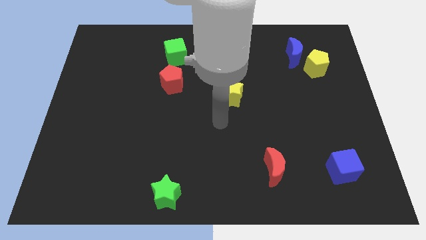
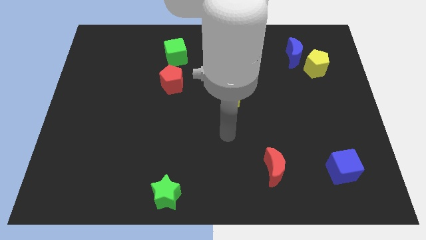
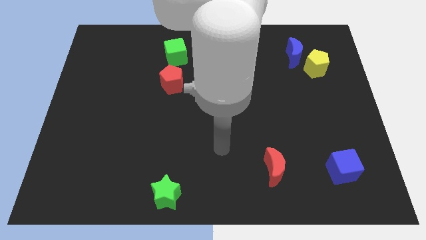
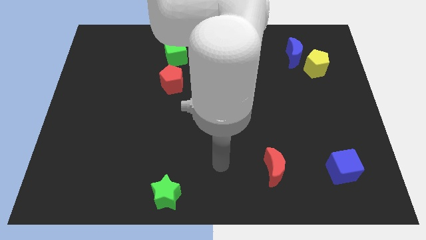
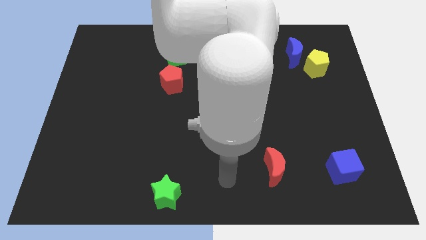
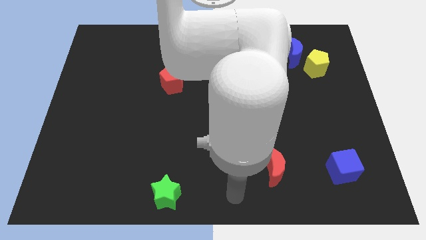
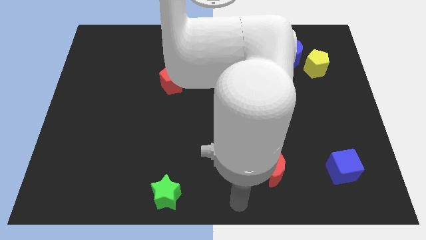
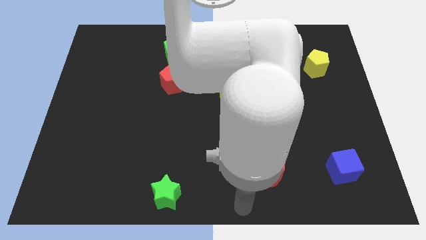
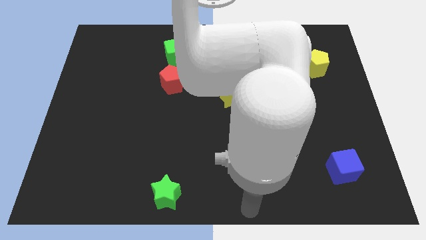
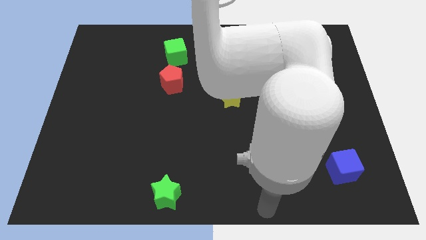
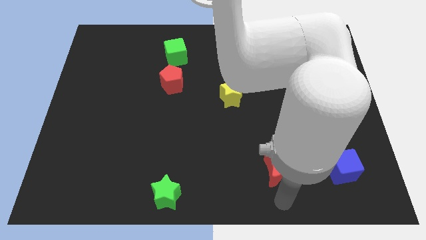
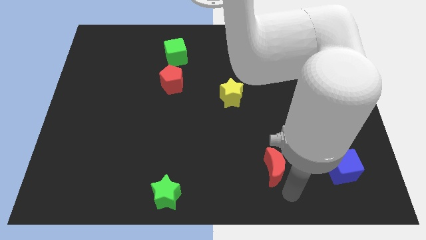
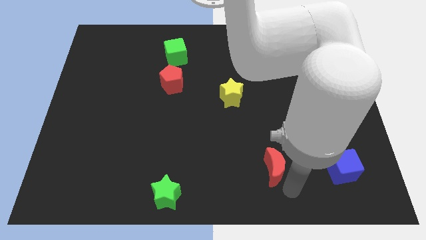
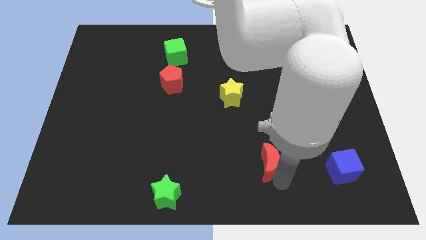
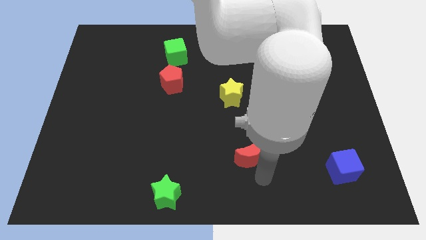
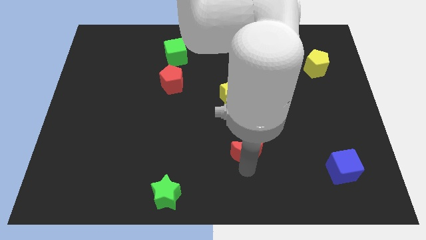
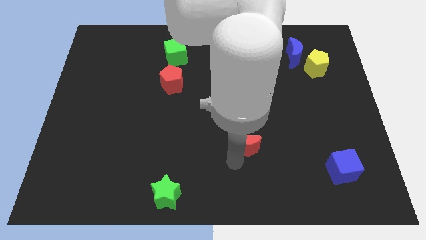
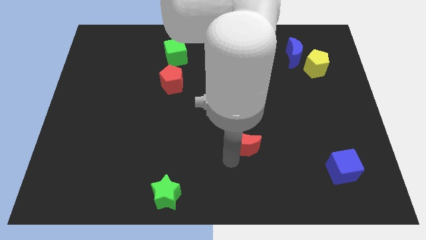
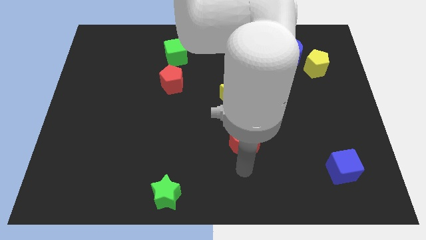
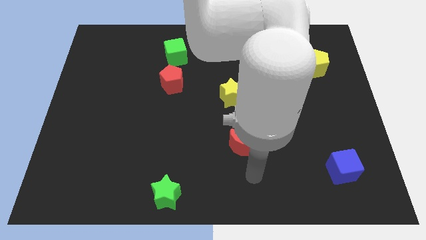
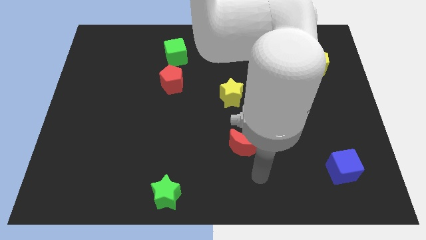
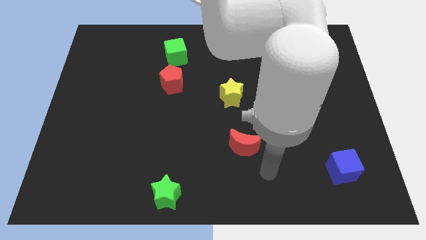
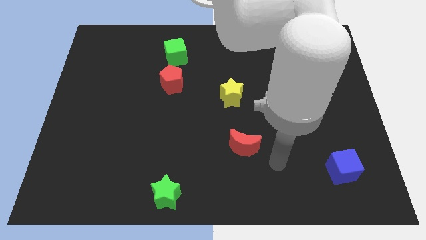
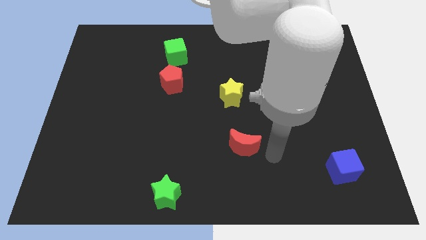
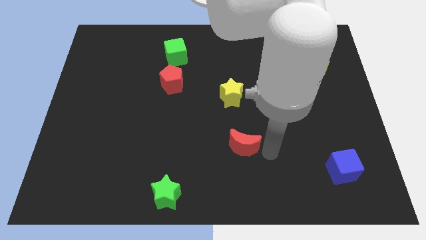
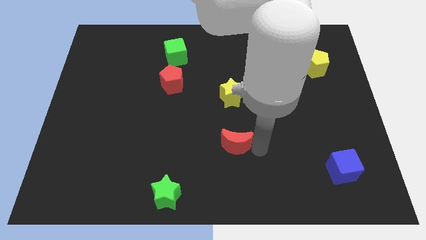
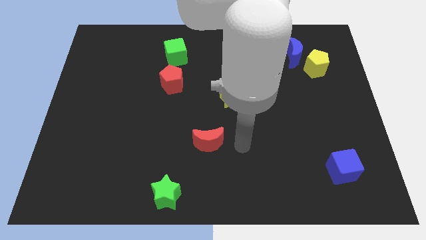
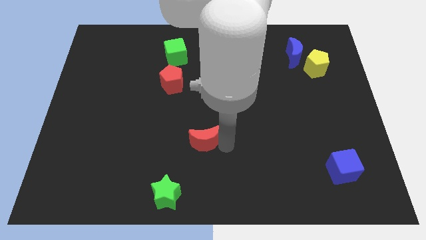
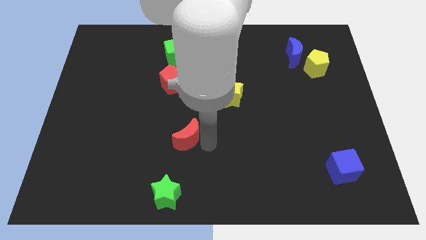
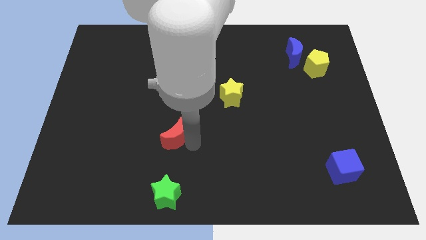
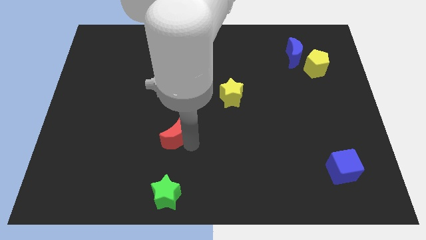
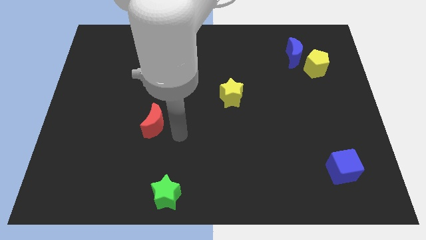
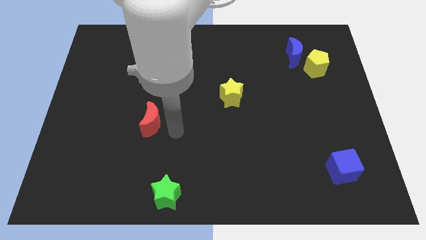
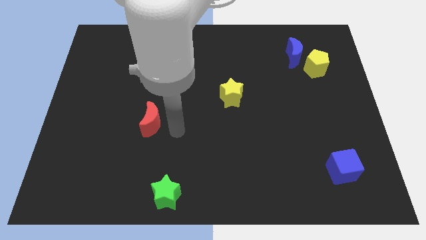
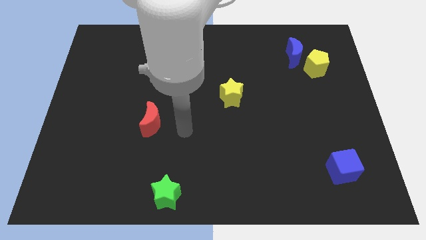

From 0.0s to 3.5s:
push the red moon slightly towards the center left of the board

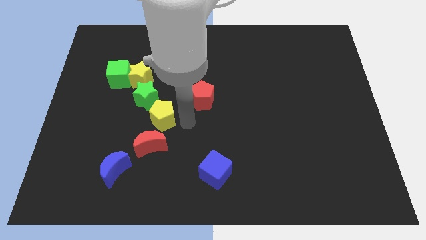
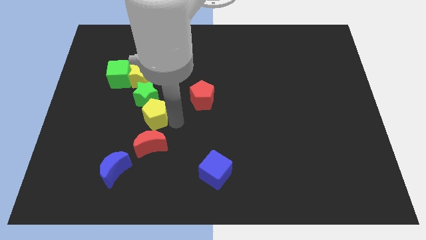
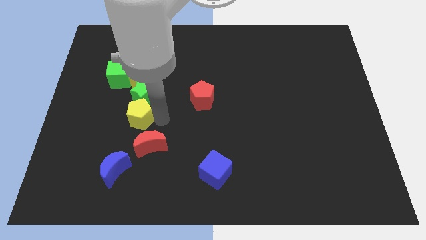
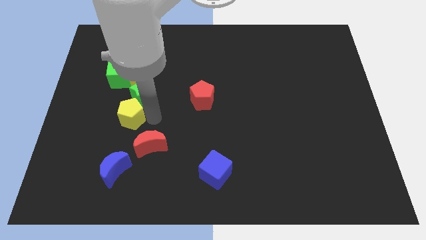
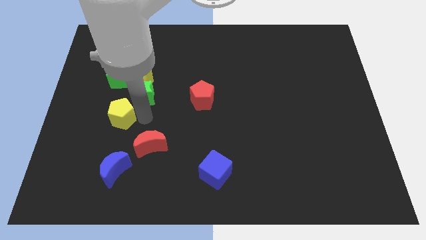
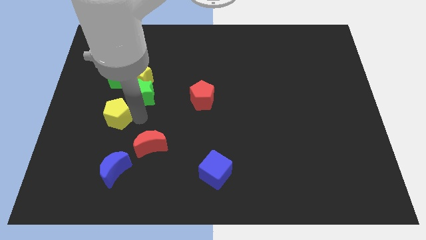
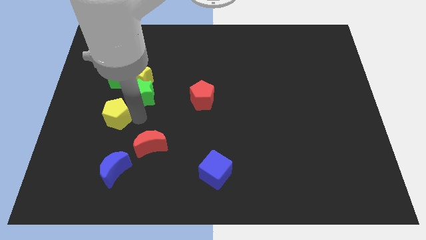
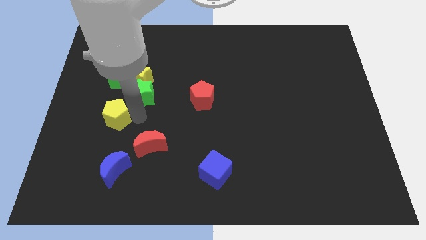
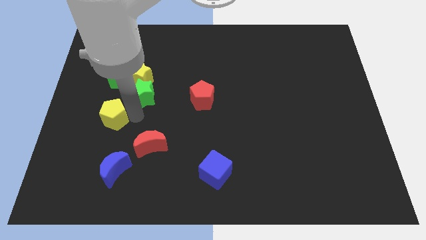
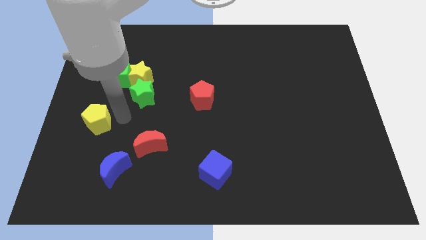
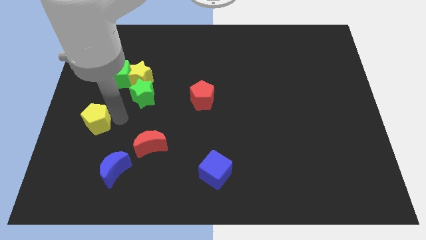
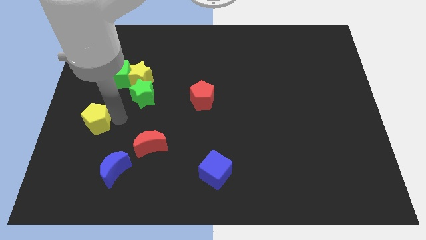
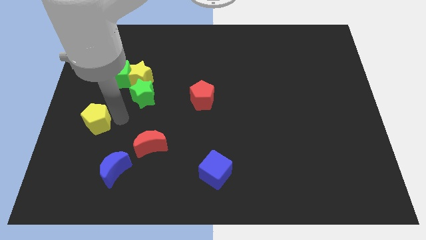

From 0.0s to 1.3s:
push the yellow pentagon to the left side of the table

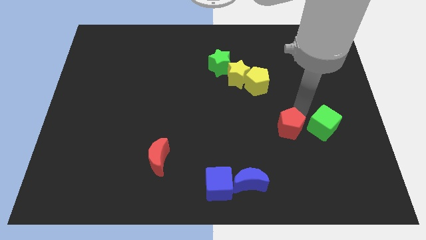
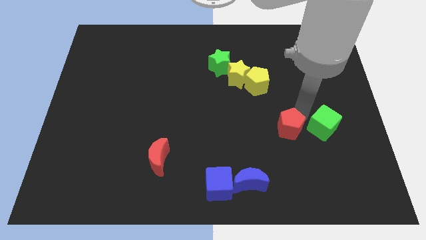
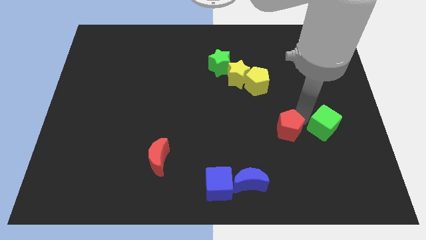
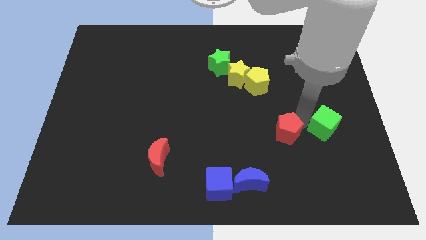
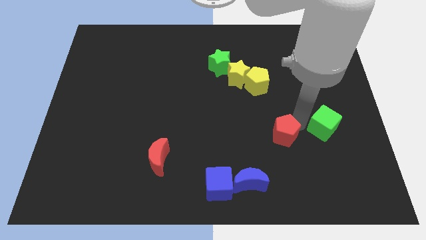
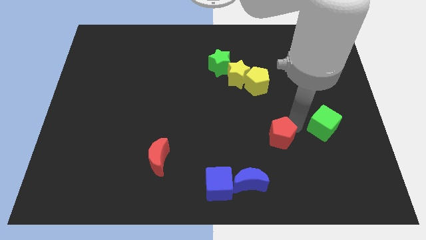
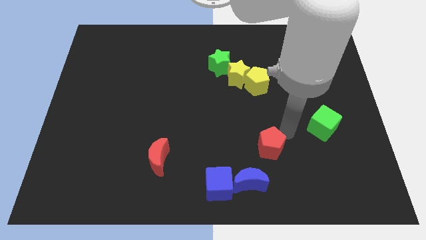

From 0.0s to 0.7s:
place the red pentagon above the right of the blue moon

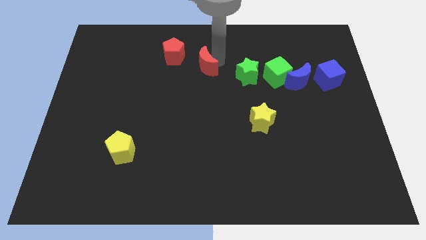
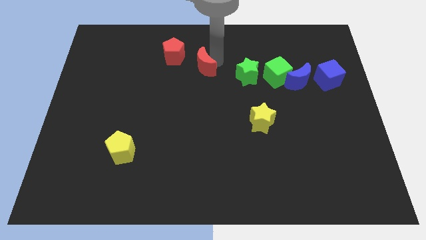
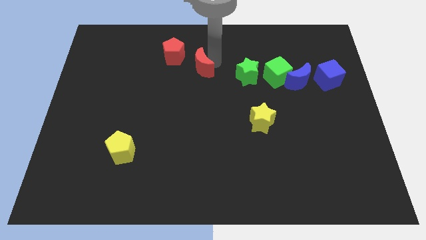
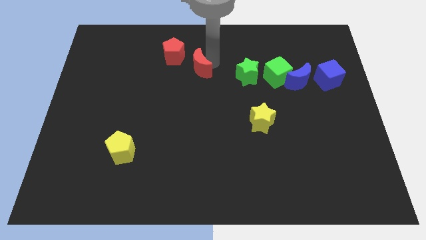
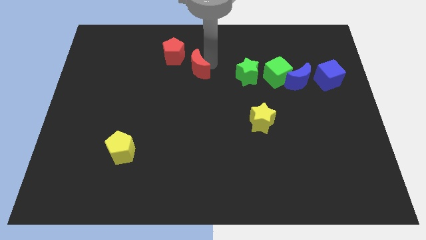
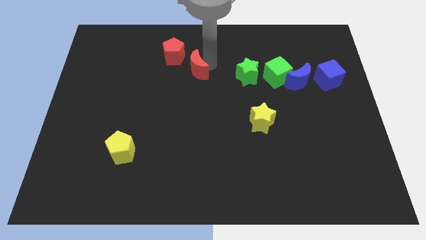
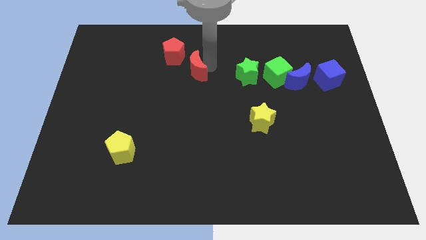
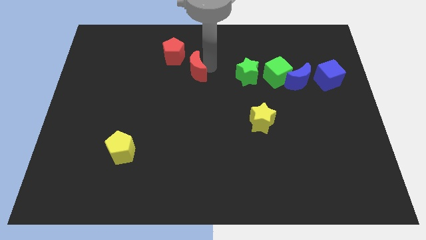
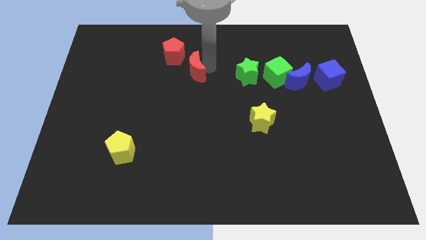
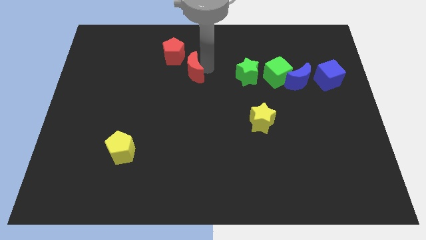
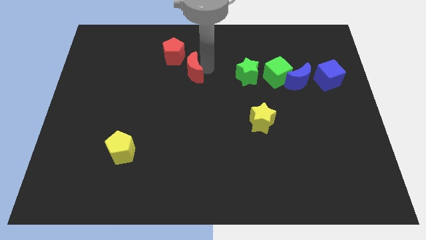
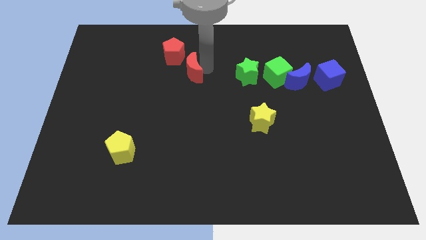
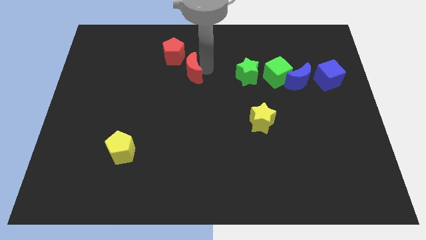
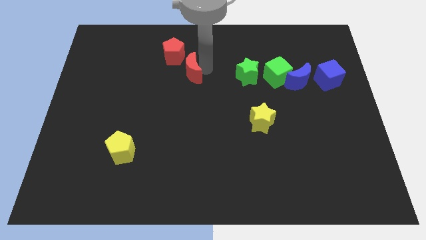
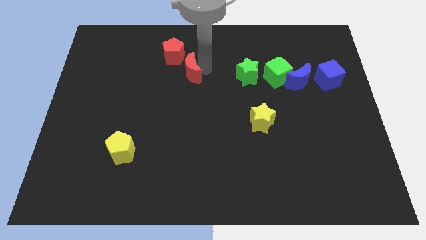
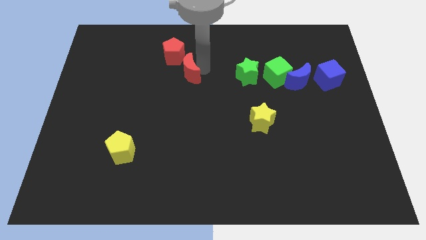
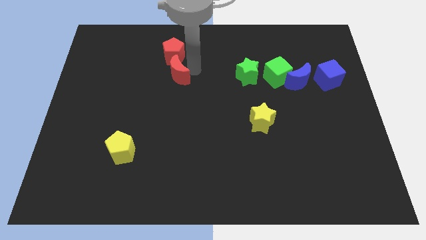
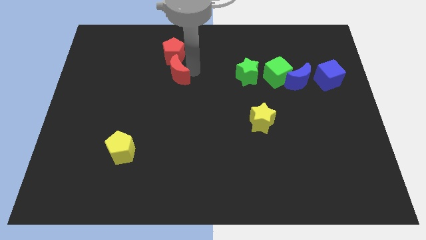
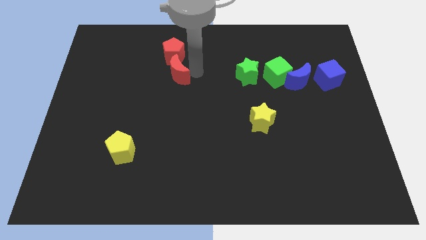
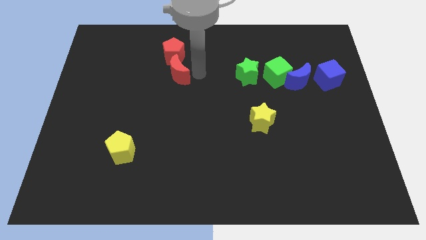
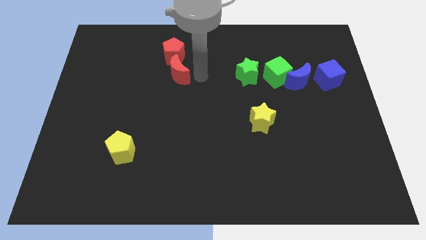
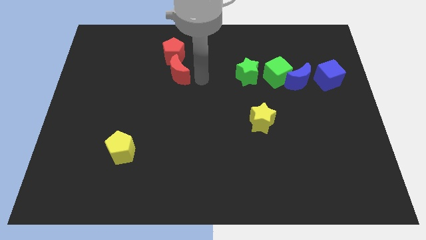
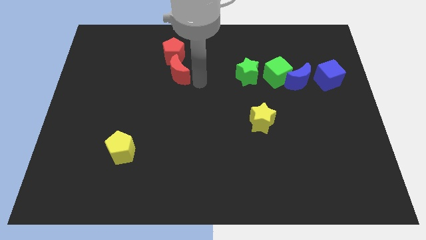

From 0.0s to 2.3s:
place the red moon below the red pentagon

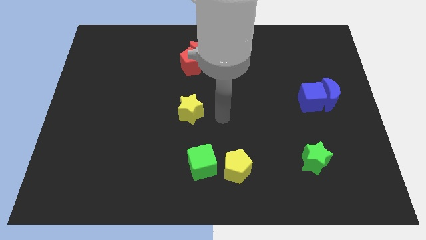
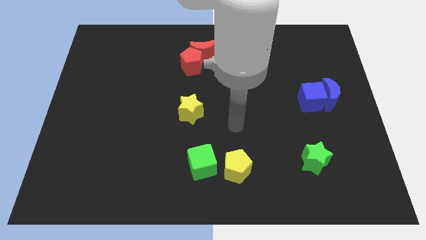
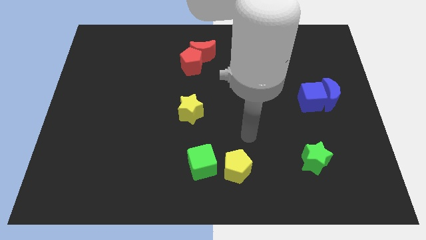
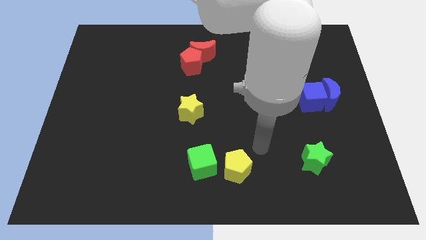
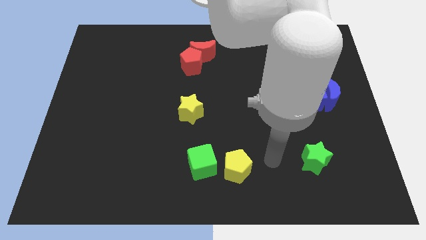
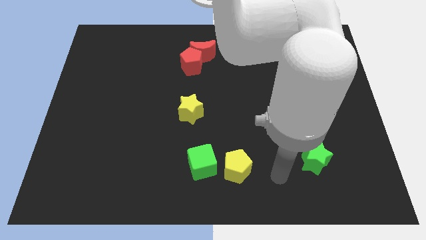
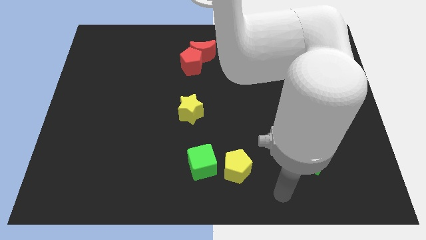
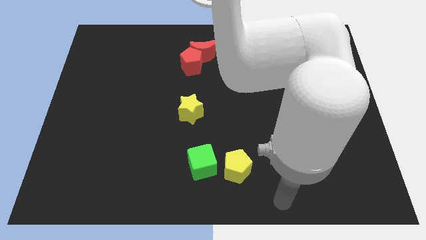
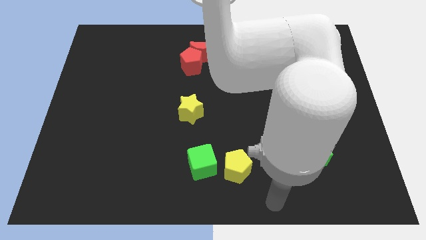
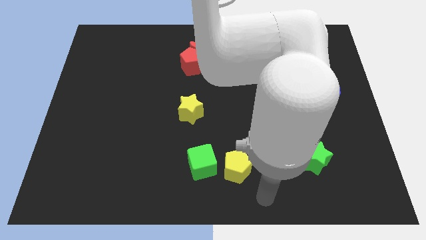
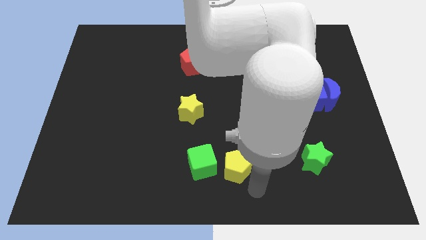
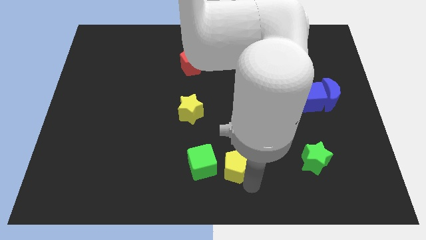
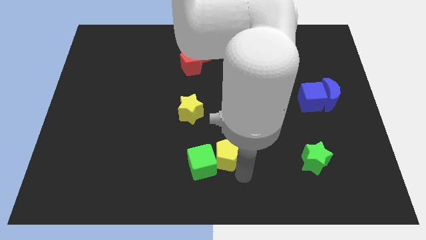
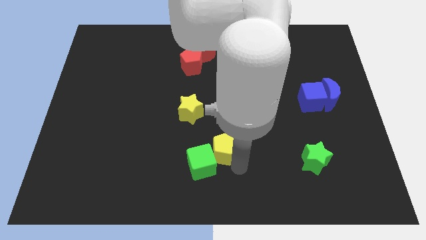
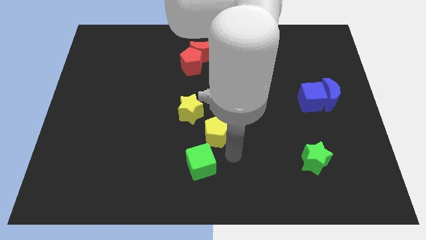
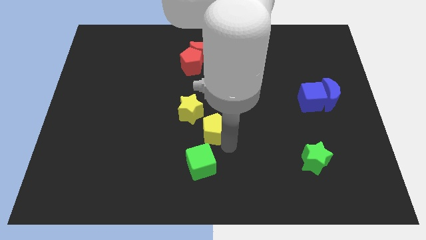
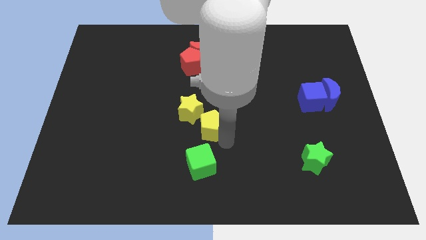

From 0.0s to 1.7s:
move the yellow pentagon diagonally top right to the green cube
